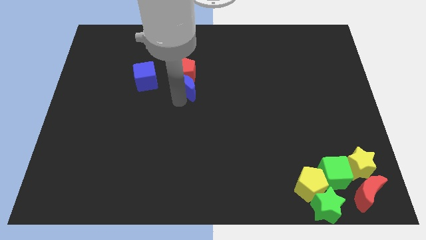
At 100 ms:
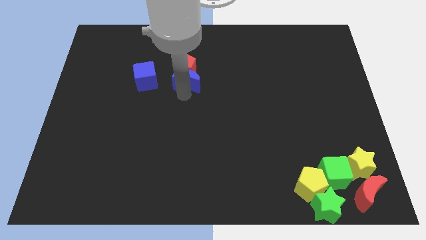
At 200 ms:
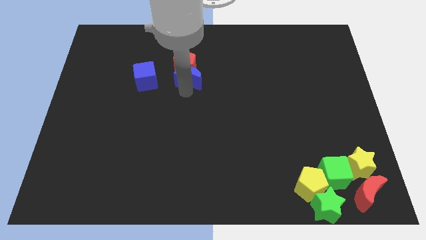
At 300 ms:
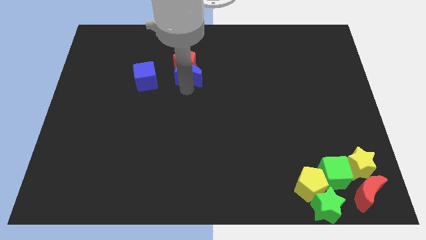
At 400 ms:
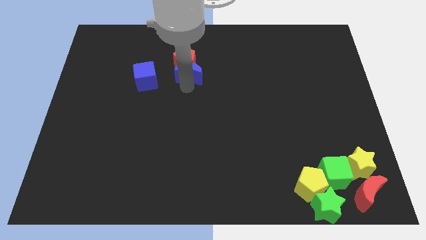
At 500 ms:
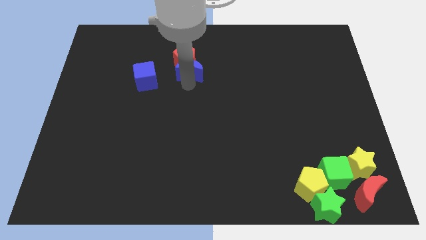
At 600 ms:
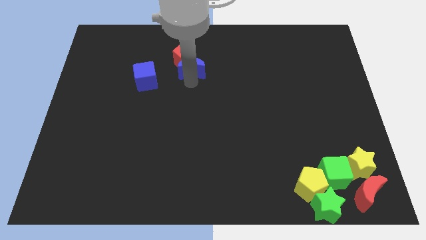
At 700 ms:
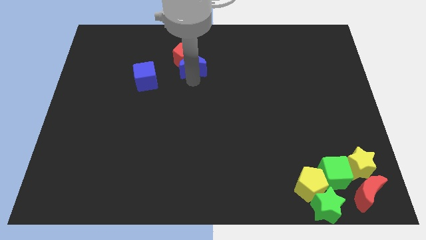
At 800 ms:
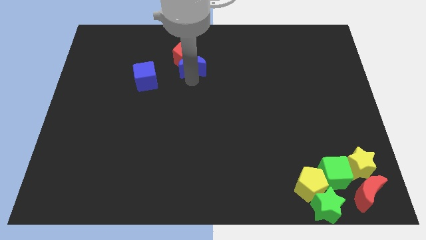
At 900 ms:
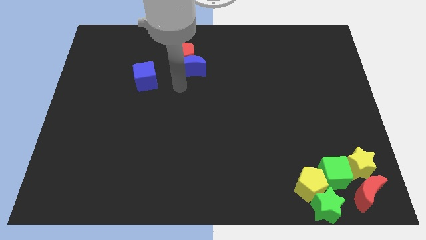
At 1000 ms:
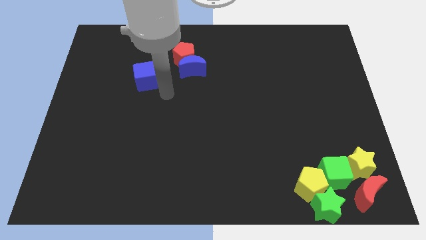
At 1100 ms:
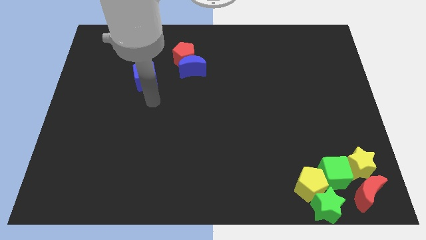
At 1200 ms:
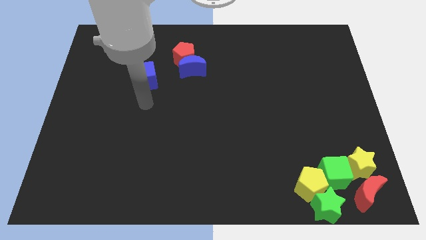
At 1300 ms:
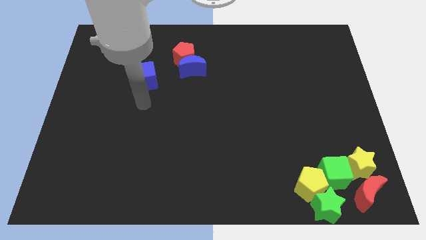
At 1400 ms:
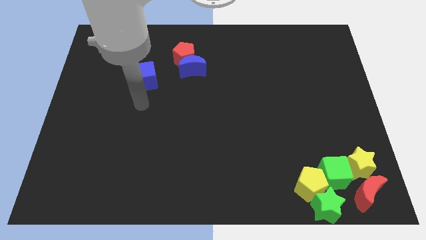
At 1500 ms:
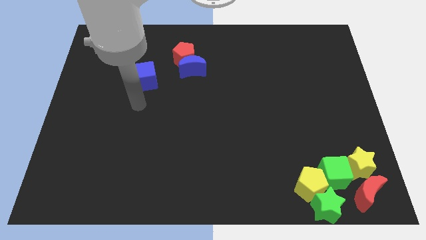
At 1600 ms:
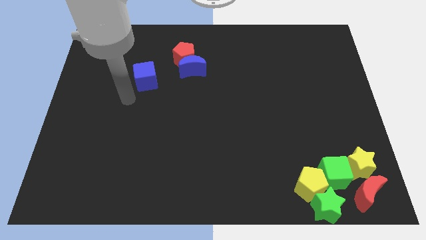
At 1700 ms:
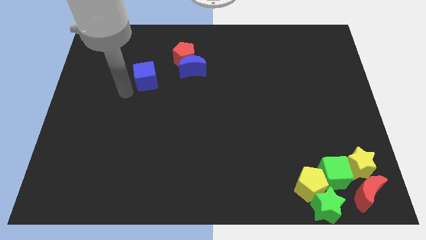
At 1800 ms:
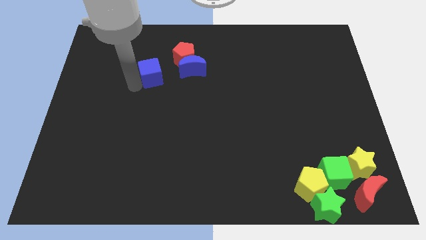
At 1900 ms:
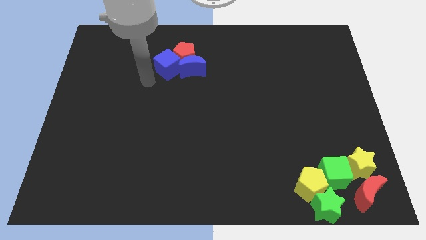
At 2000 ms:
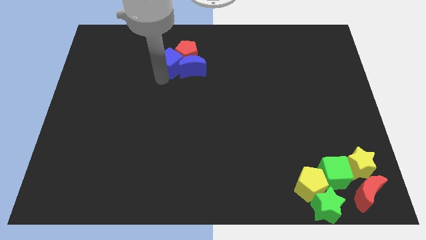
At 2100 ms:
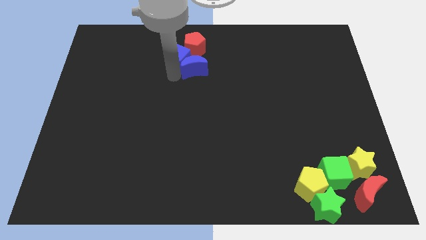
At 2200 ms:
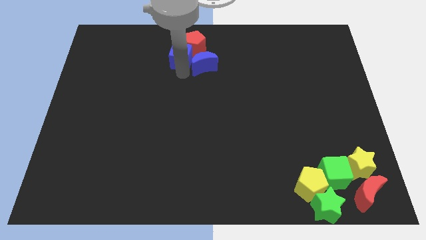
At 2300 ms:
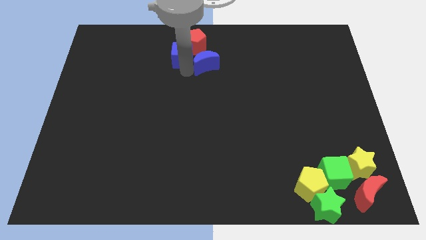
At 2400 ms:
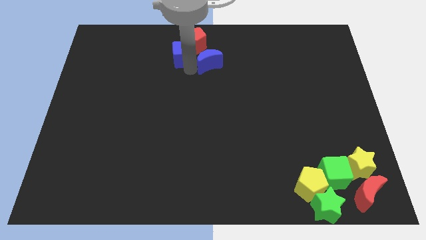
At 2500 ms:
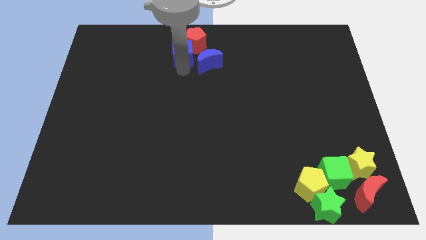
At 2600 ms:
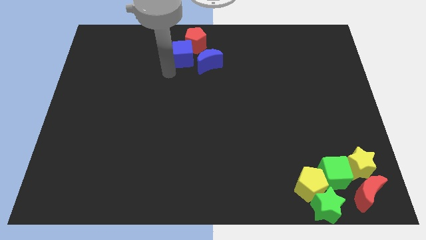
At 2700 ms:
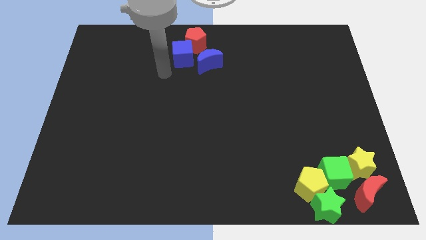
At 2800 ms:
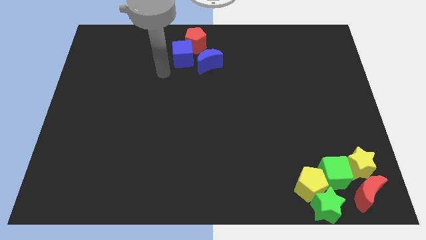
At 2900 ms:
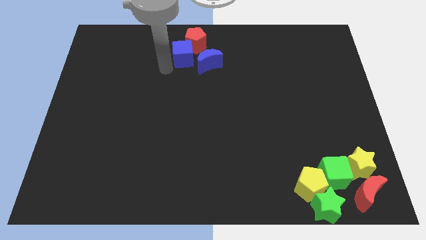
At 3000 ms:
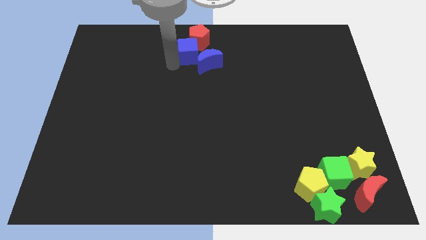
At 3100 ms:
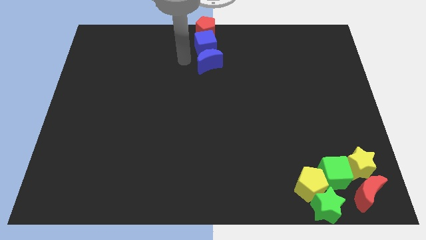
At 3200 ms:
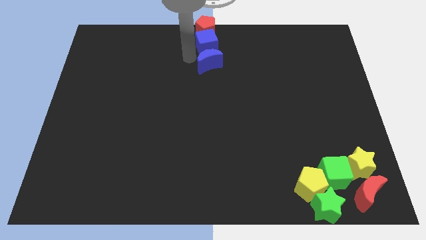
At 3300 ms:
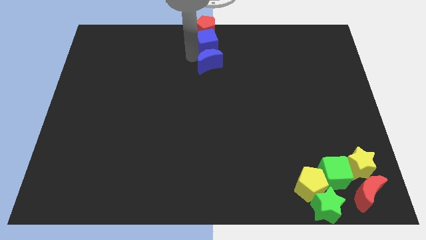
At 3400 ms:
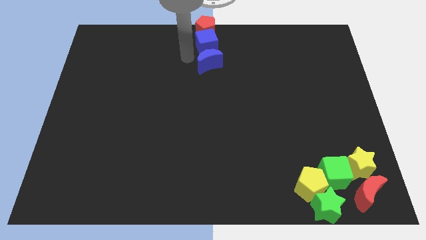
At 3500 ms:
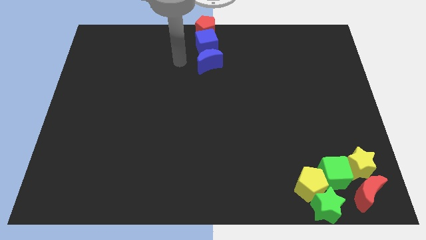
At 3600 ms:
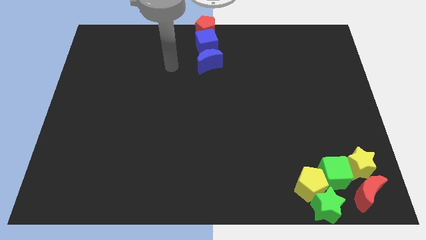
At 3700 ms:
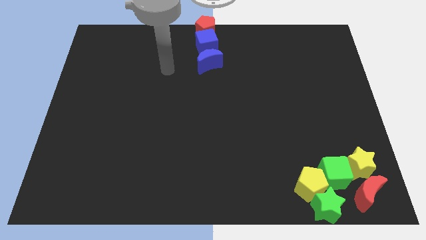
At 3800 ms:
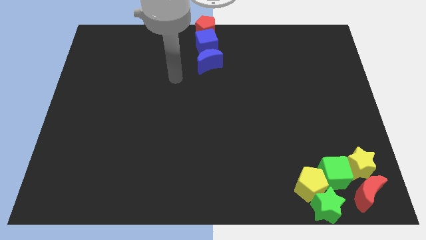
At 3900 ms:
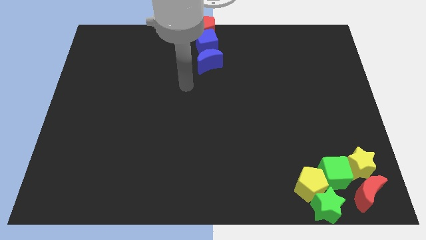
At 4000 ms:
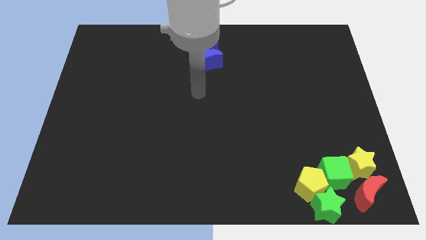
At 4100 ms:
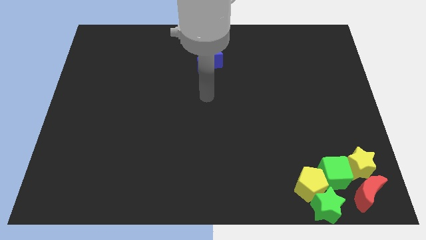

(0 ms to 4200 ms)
place the blue cube bottom of the red pentagon

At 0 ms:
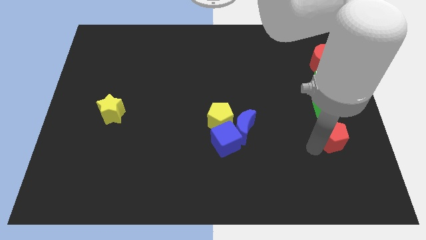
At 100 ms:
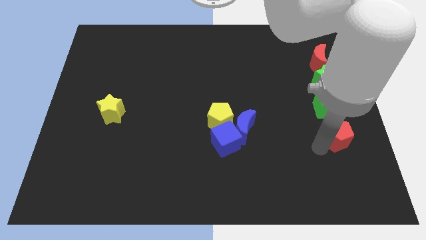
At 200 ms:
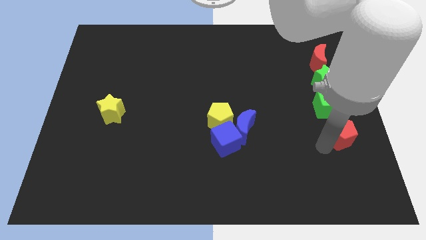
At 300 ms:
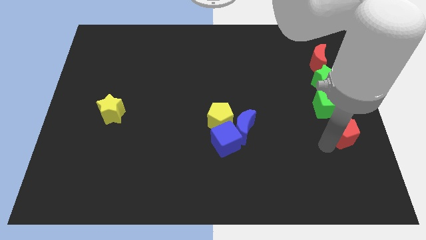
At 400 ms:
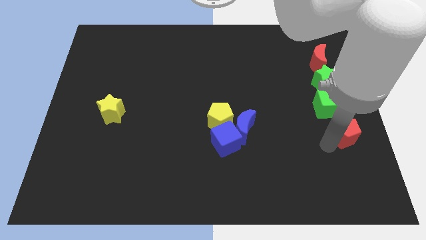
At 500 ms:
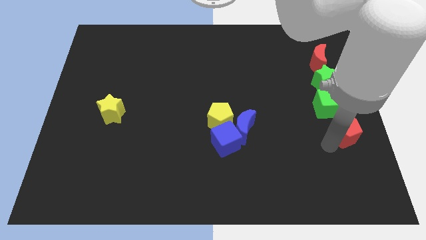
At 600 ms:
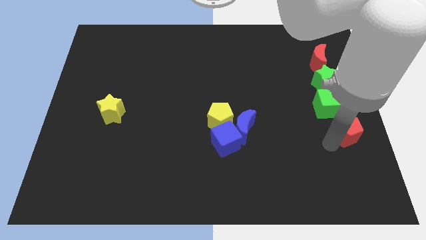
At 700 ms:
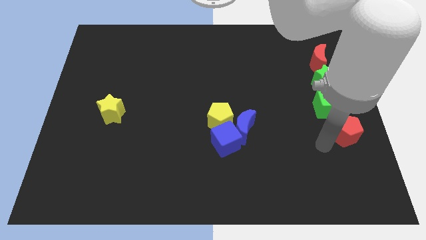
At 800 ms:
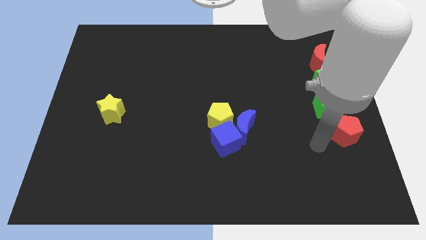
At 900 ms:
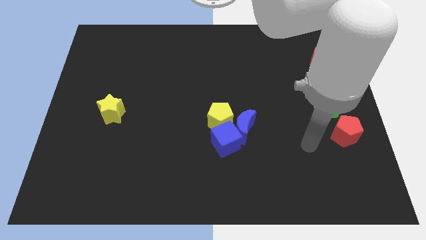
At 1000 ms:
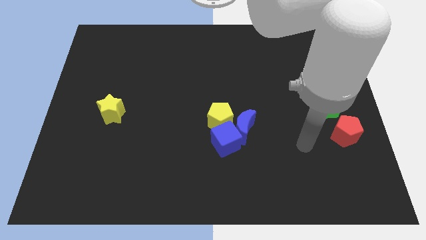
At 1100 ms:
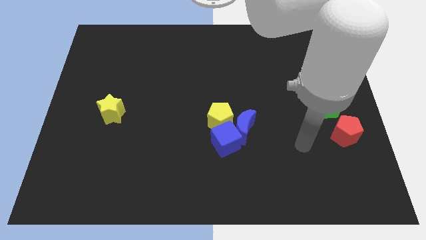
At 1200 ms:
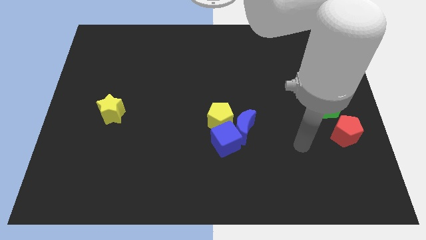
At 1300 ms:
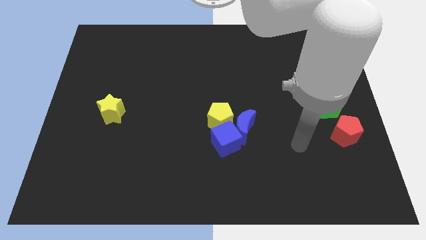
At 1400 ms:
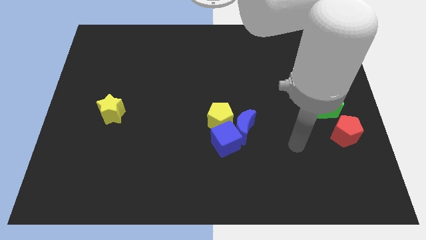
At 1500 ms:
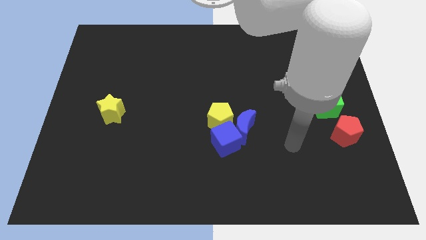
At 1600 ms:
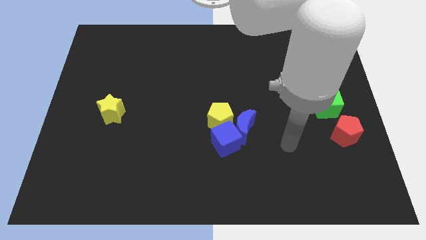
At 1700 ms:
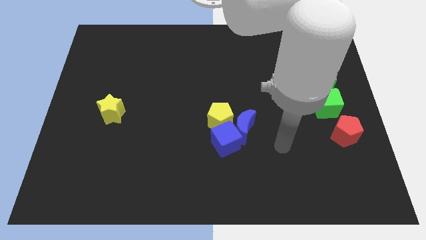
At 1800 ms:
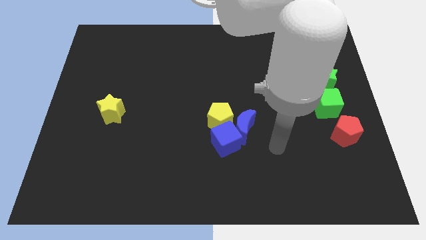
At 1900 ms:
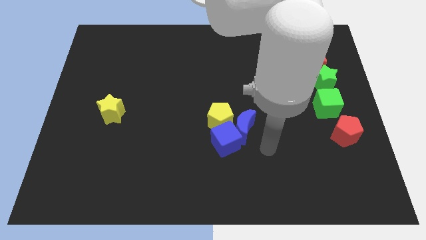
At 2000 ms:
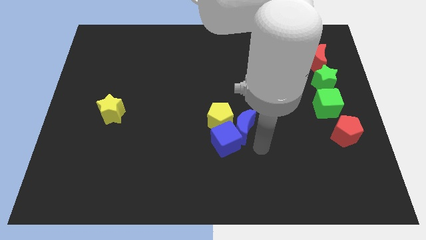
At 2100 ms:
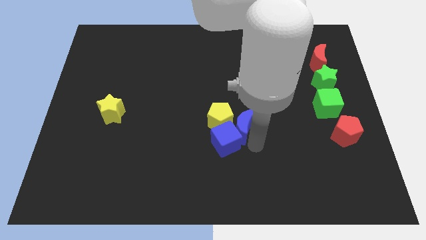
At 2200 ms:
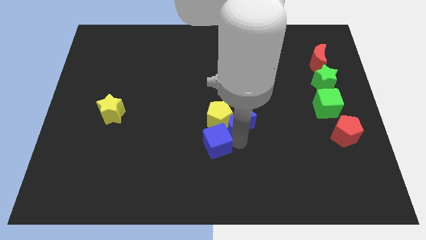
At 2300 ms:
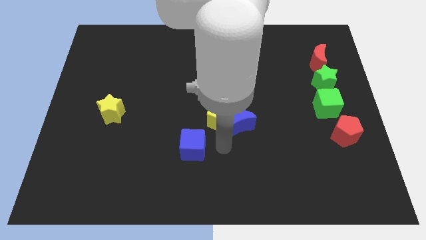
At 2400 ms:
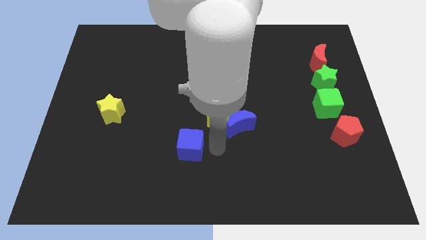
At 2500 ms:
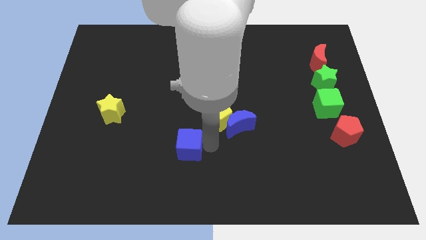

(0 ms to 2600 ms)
move your arm towards the blue cube

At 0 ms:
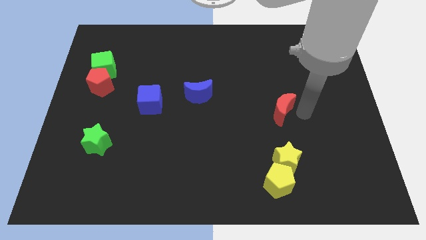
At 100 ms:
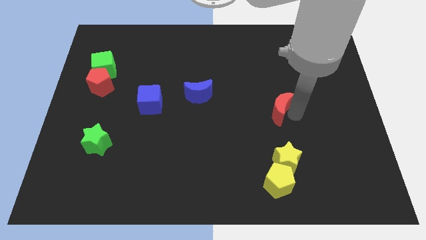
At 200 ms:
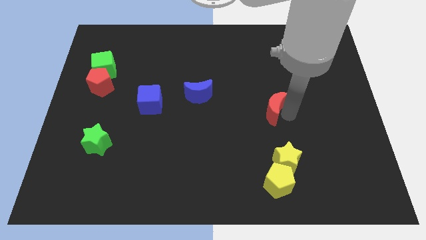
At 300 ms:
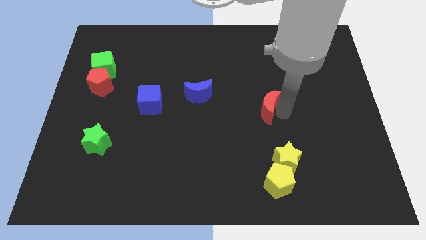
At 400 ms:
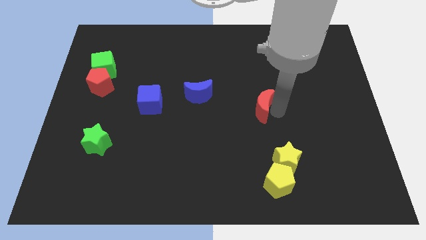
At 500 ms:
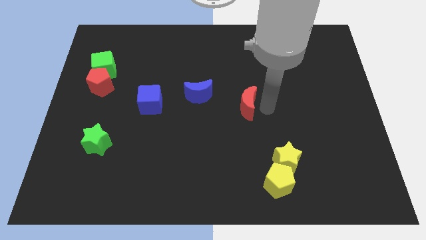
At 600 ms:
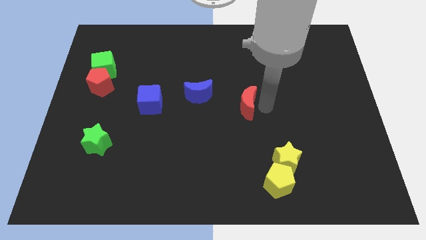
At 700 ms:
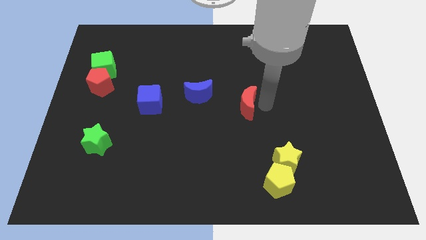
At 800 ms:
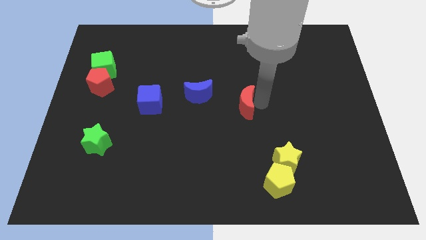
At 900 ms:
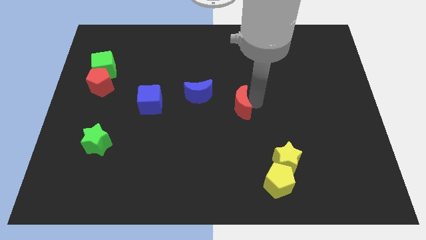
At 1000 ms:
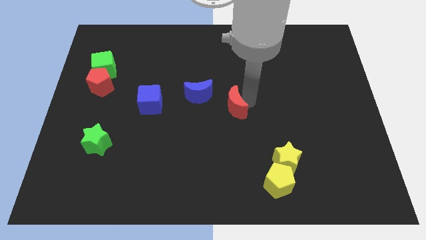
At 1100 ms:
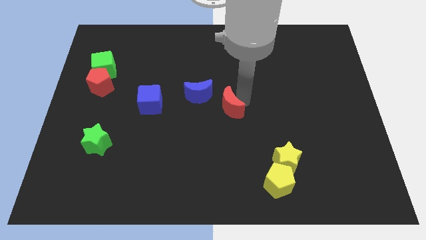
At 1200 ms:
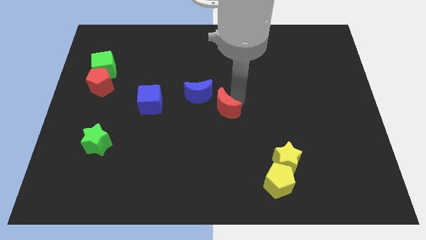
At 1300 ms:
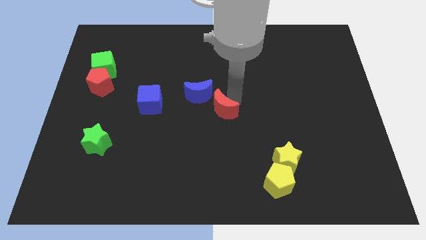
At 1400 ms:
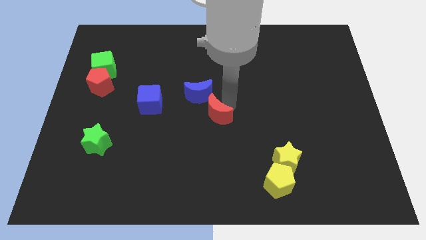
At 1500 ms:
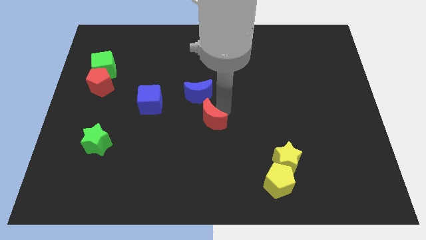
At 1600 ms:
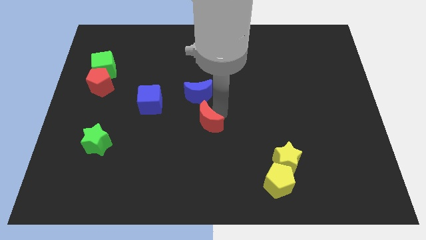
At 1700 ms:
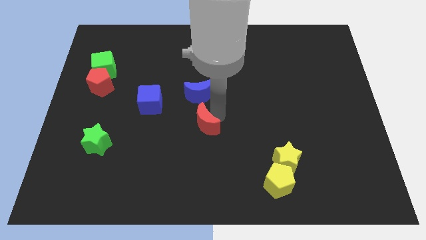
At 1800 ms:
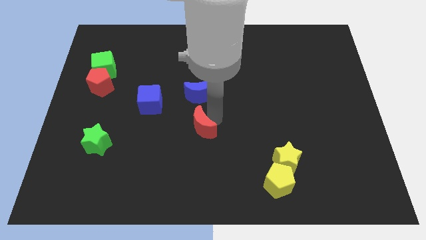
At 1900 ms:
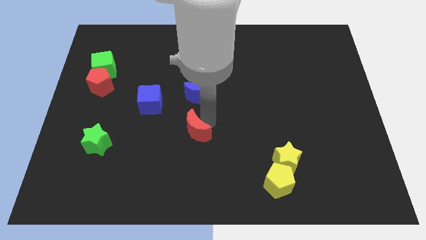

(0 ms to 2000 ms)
place the red crescent at the center of the board

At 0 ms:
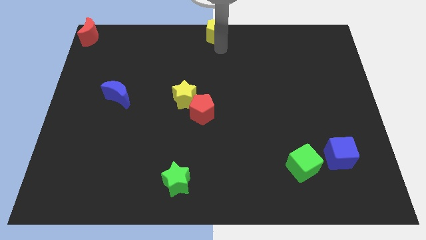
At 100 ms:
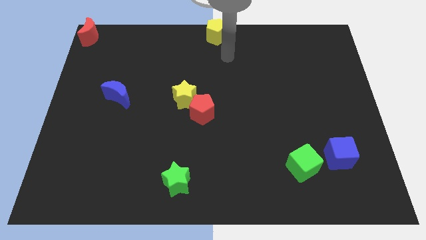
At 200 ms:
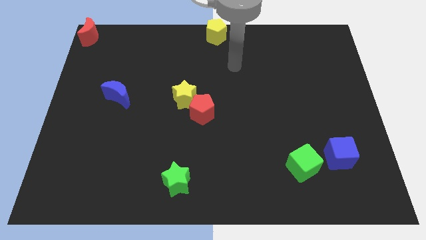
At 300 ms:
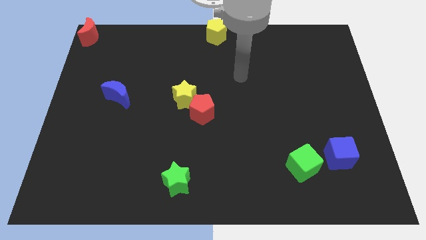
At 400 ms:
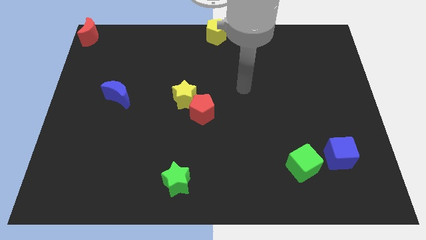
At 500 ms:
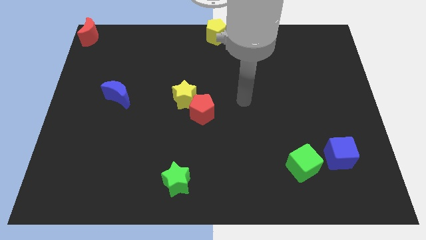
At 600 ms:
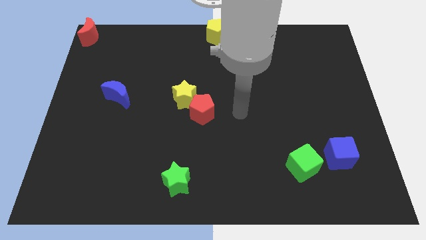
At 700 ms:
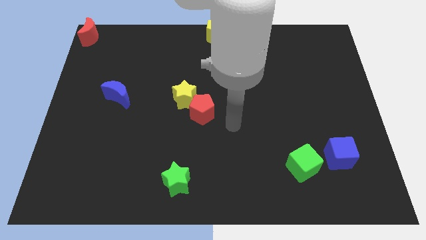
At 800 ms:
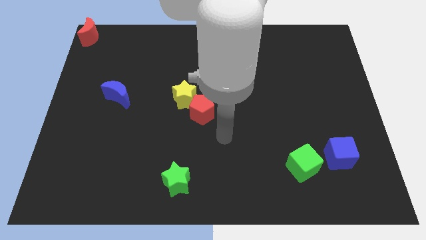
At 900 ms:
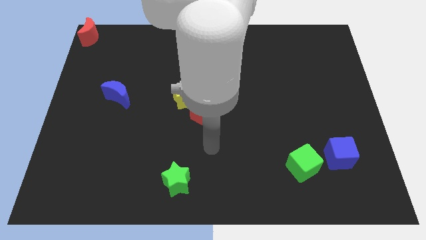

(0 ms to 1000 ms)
move your arm towards the bottom side
